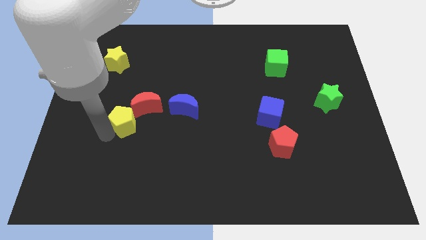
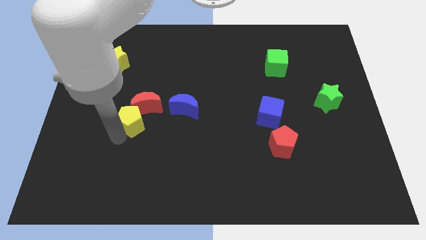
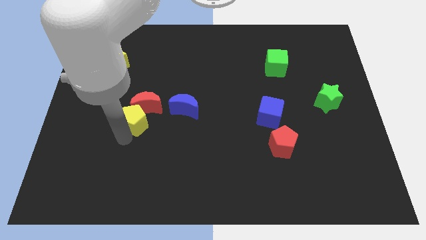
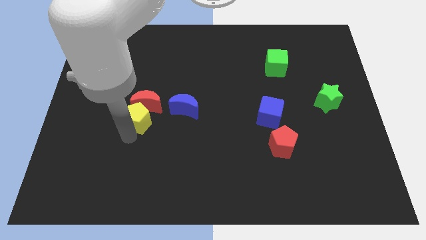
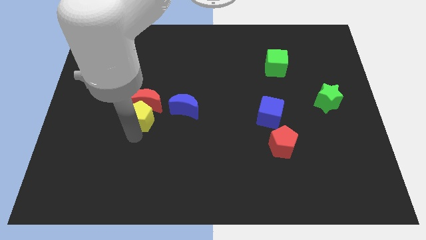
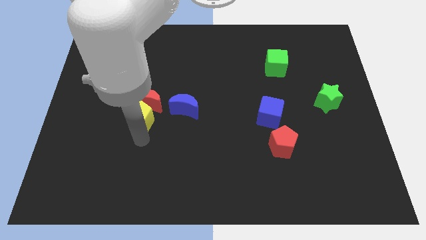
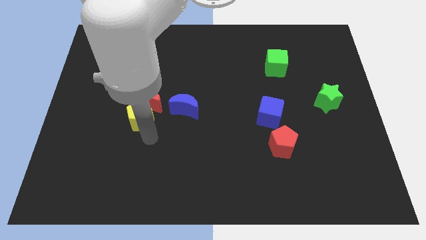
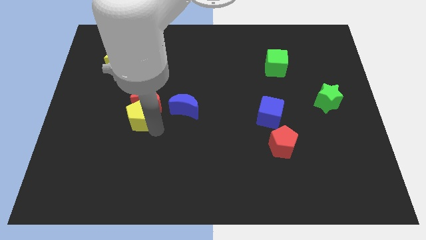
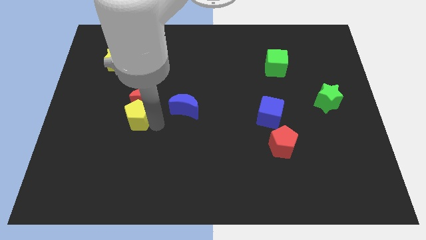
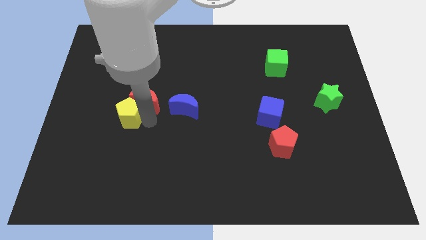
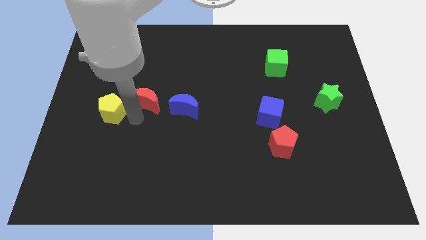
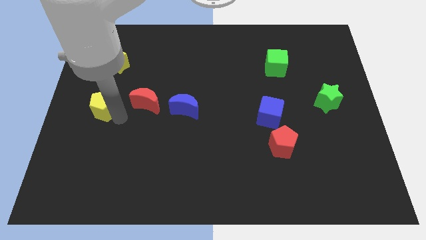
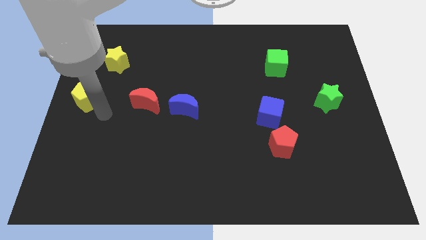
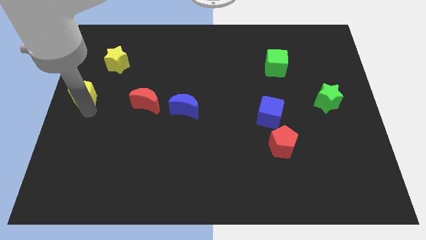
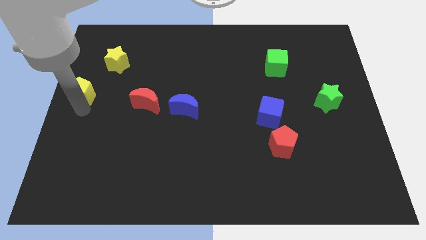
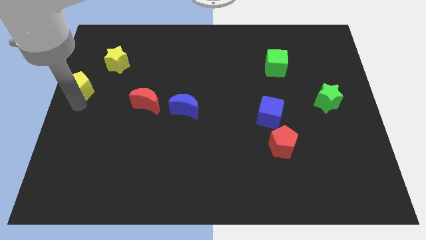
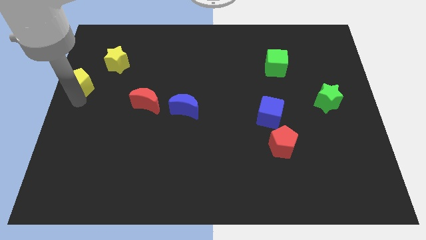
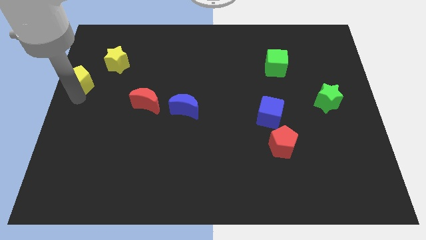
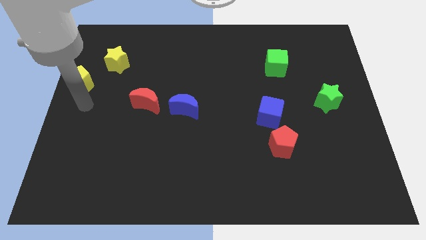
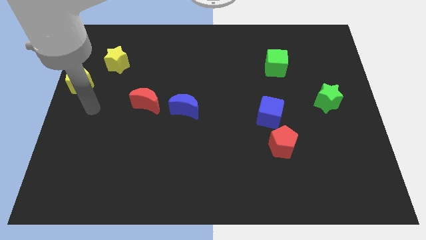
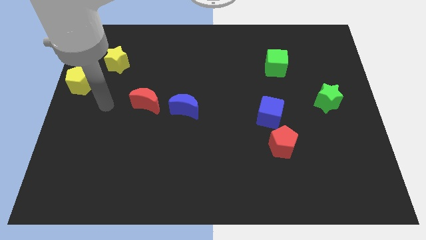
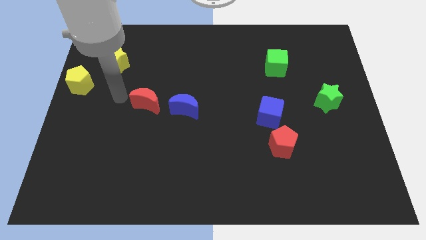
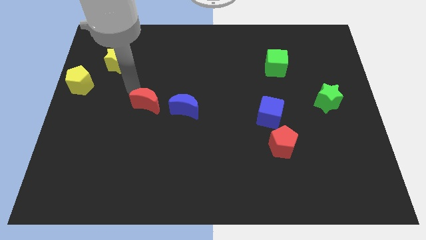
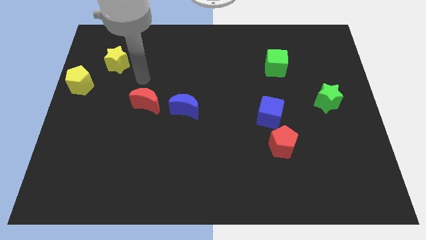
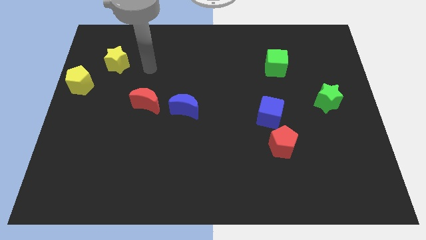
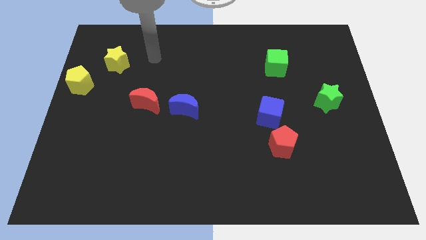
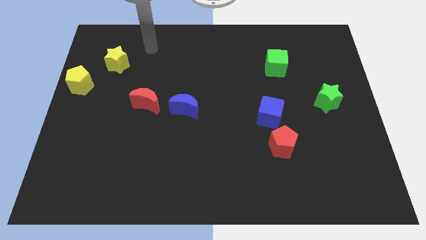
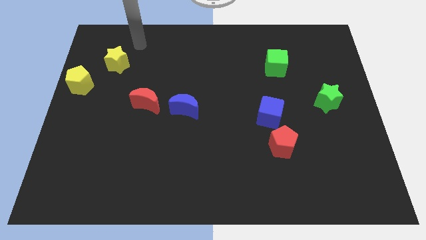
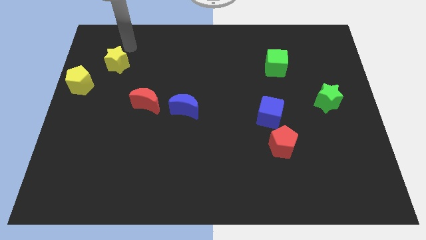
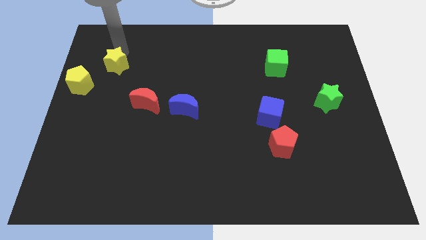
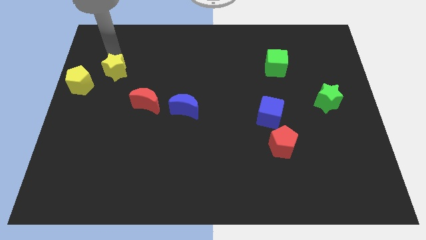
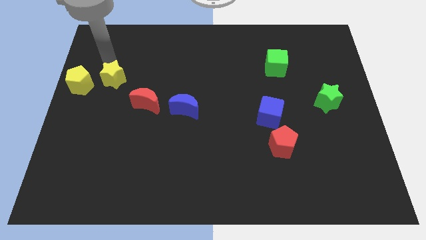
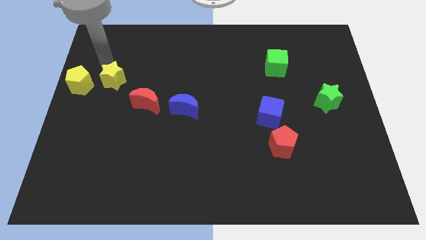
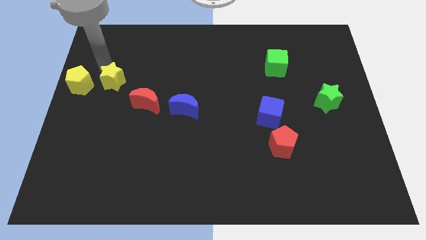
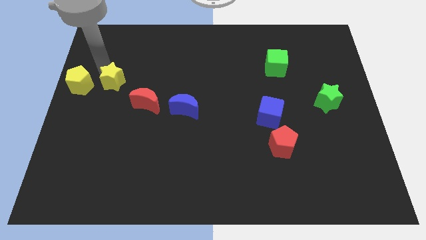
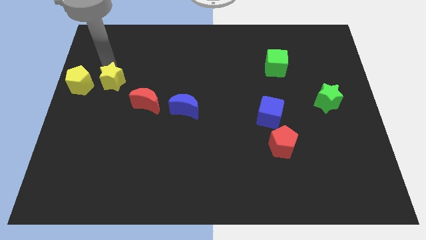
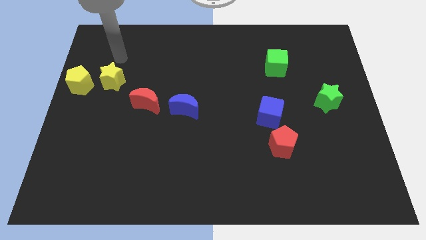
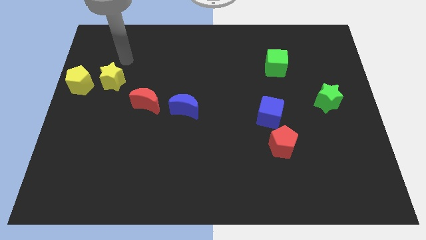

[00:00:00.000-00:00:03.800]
put the yellow blocks in a horizontal line at the center left side of the board

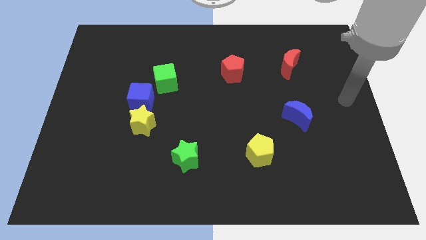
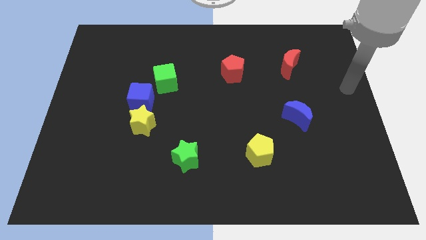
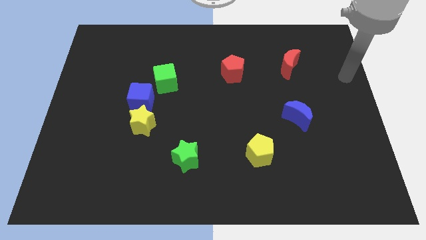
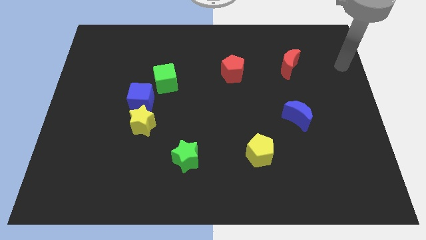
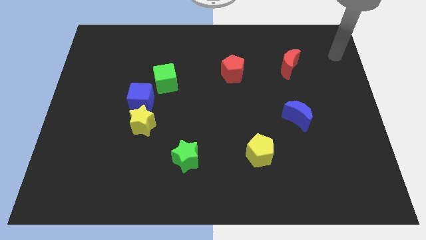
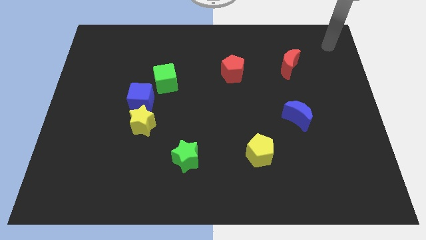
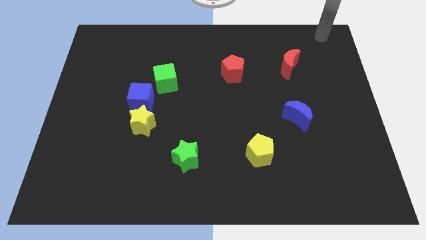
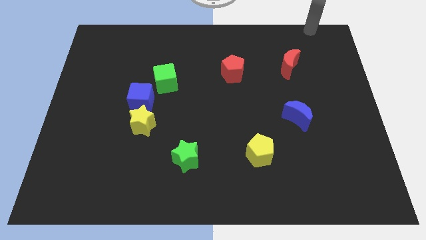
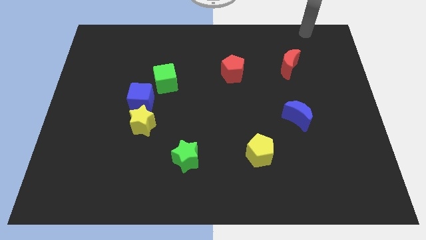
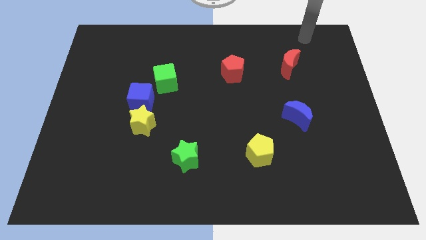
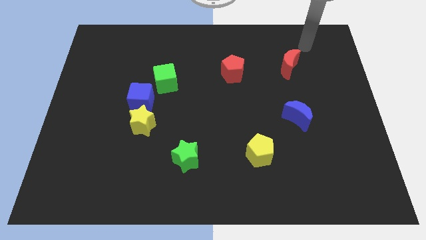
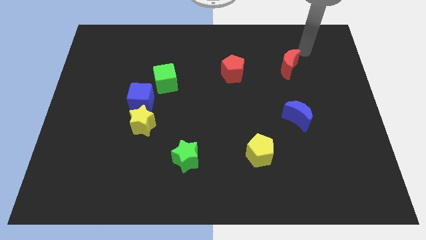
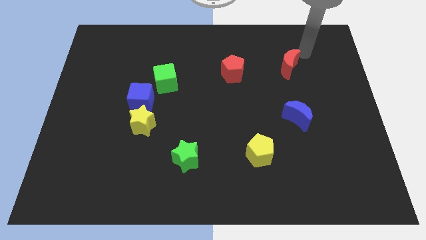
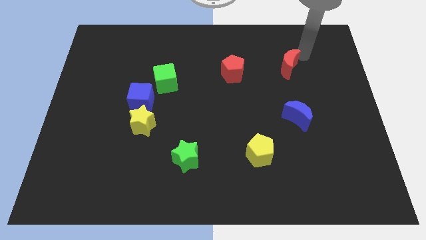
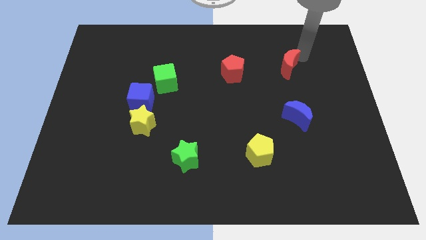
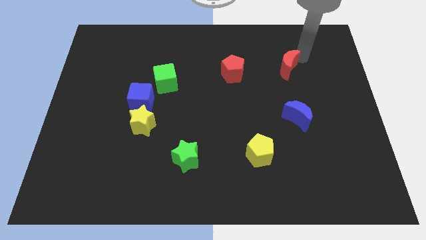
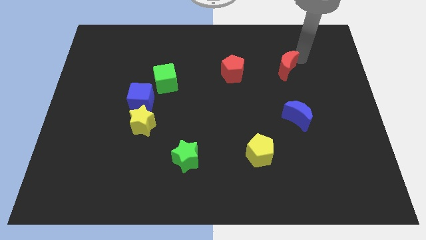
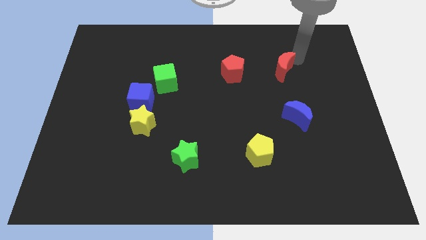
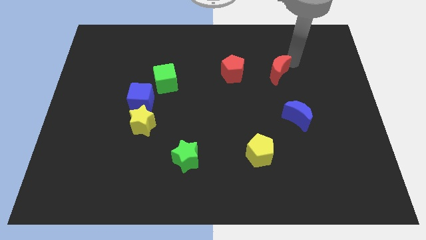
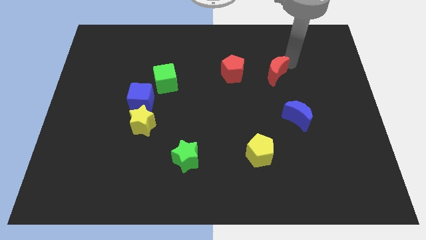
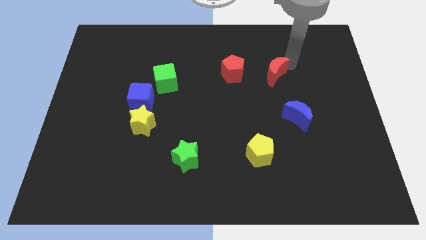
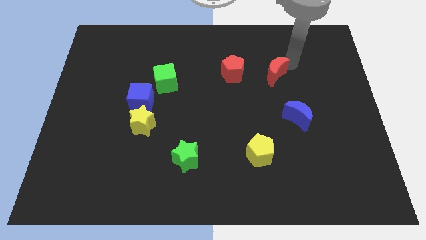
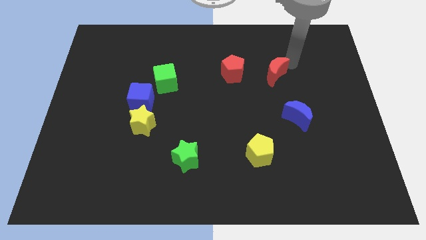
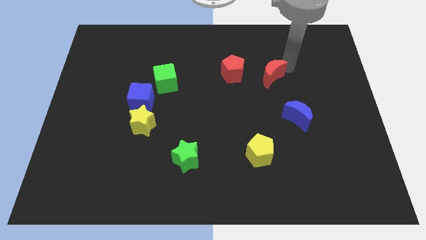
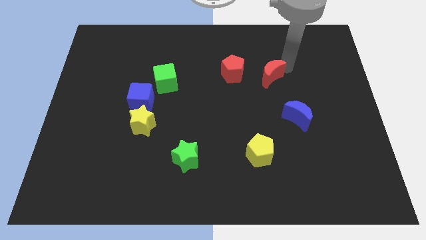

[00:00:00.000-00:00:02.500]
place red moon right to red pentagon

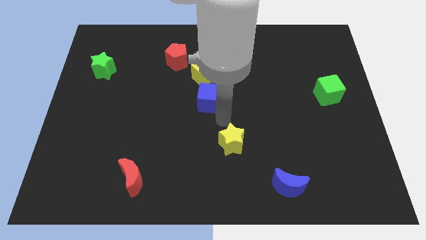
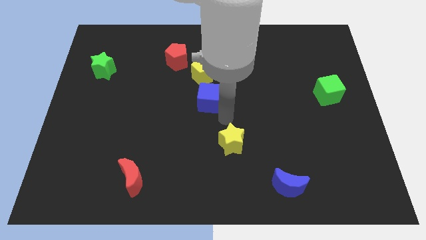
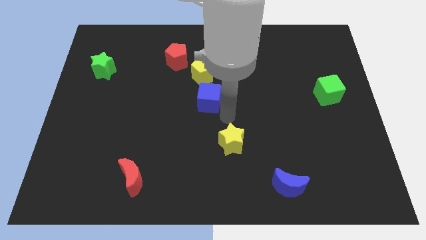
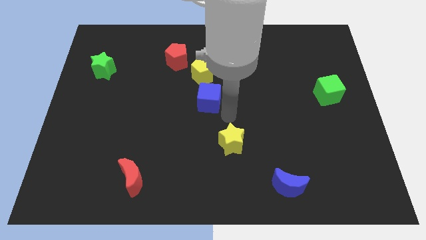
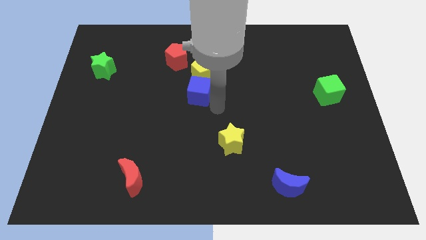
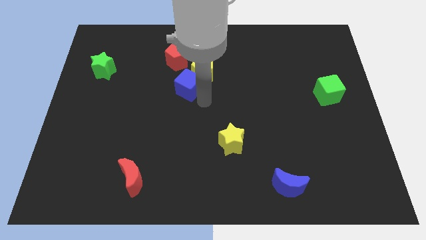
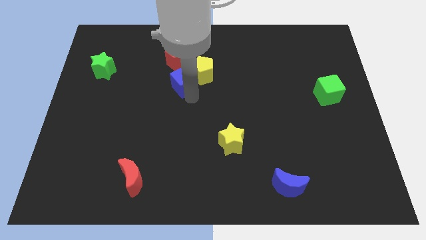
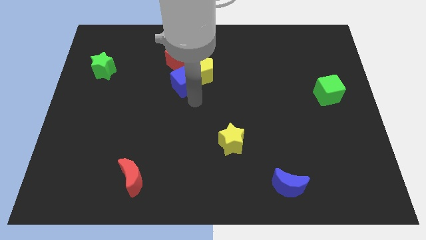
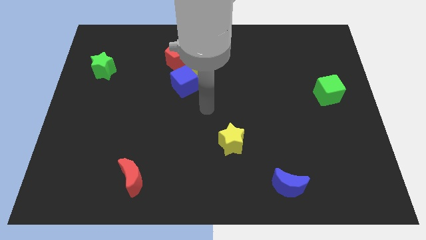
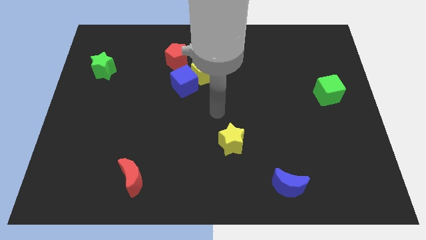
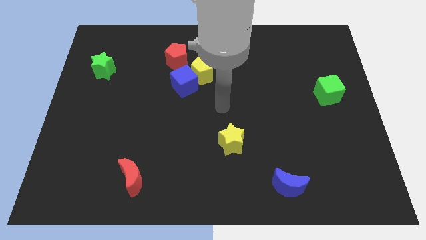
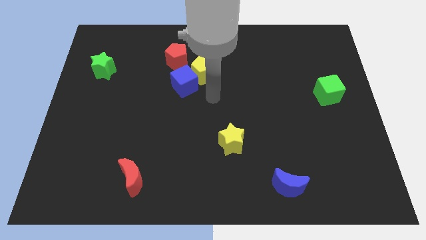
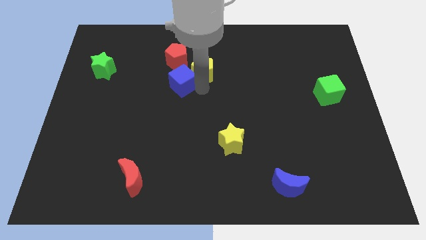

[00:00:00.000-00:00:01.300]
slide the blue cube to the bottom left side of the yellow pentagon

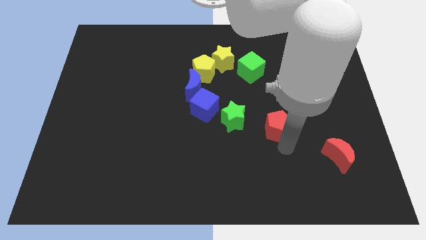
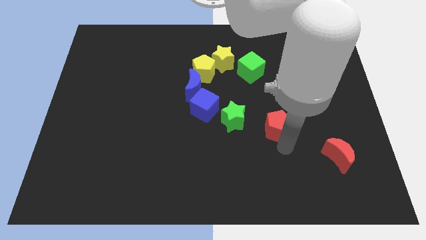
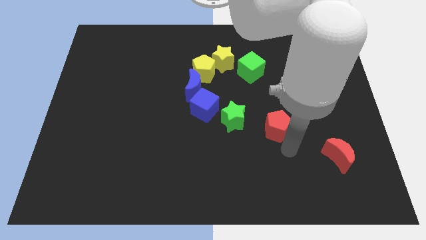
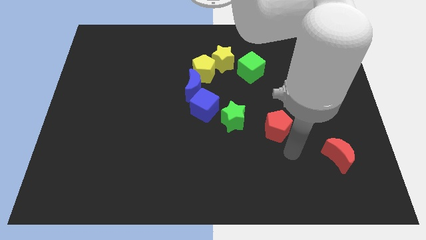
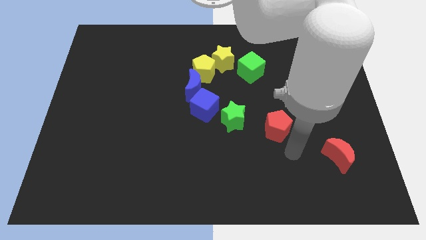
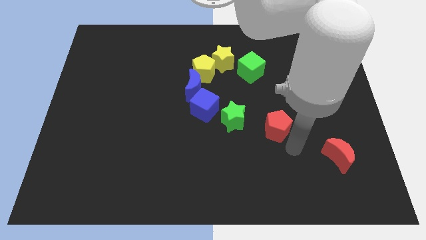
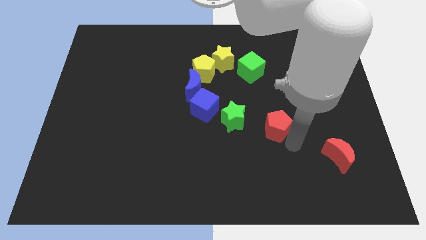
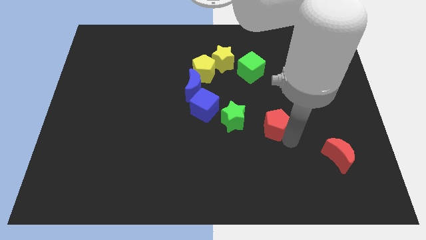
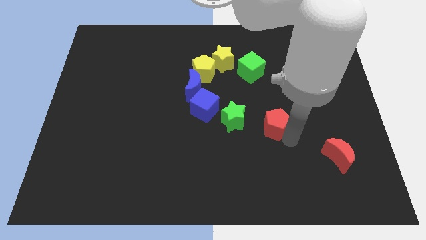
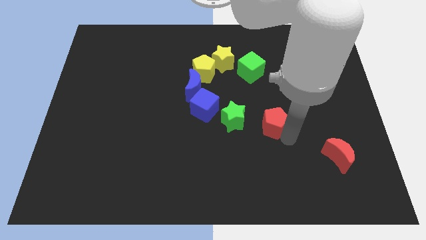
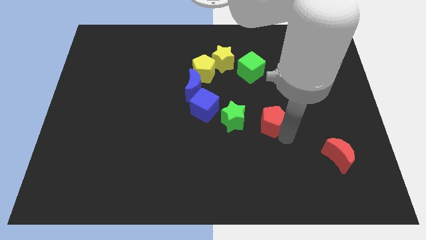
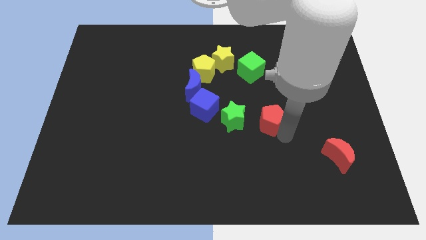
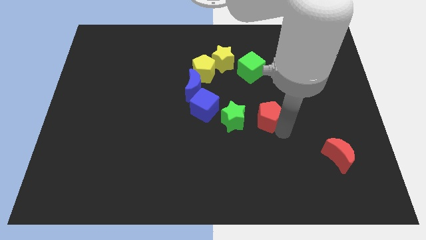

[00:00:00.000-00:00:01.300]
move the red pentagon to the right of the green star
